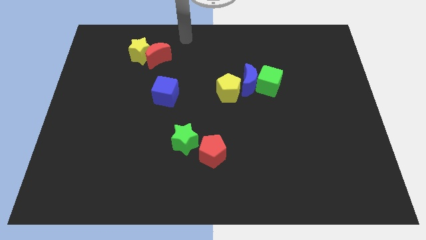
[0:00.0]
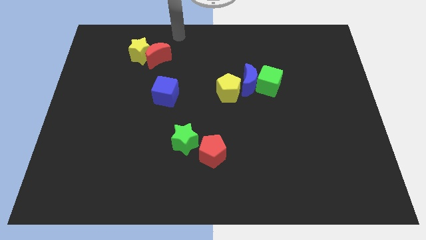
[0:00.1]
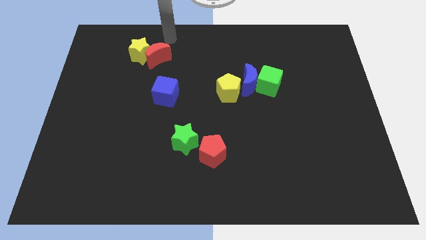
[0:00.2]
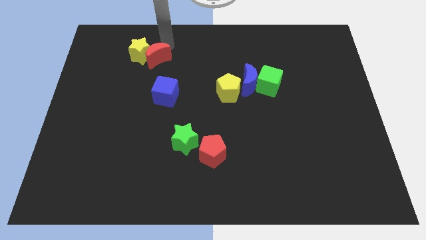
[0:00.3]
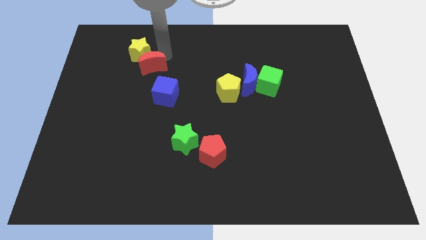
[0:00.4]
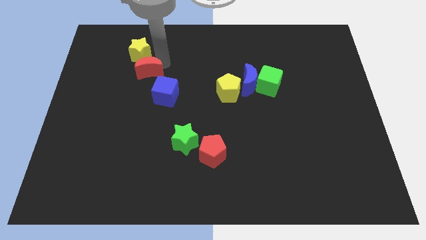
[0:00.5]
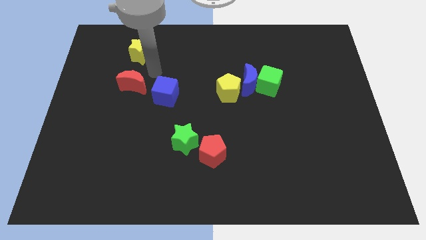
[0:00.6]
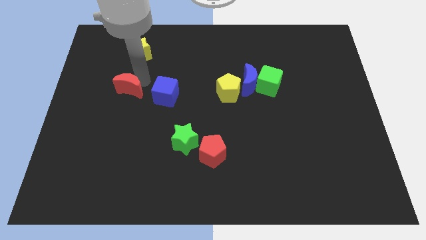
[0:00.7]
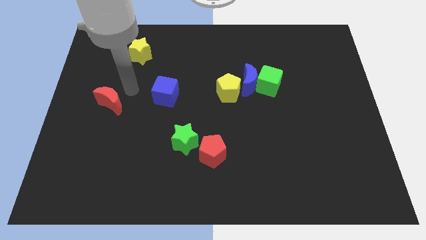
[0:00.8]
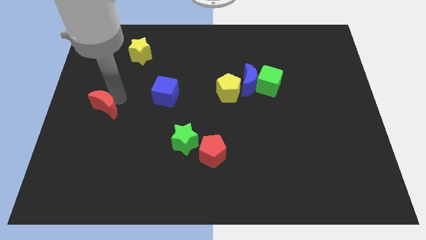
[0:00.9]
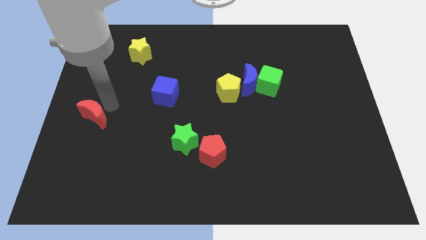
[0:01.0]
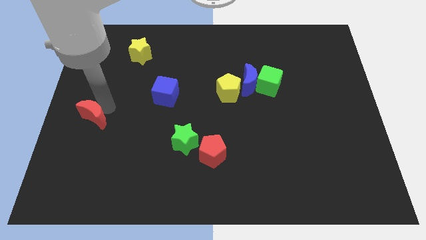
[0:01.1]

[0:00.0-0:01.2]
separate the red crescent from the yellow star

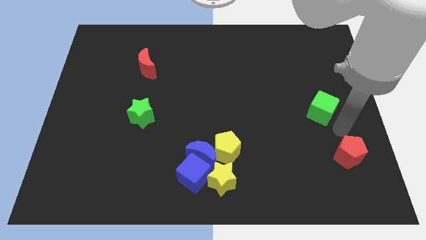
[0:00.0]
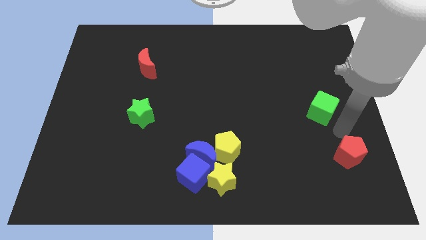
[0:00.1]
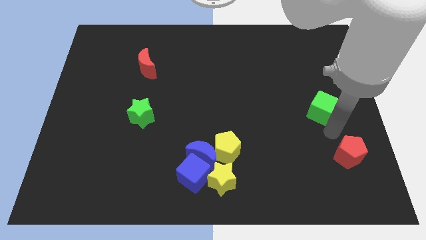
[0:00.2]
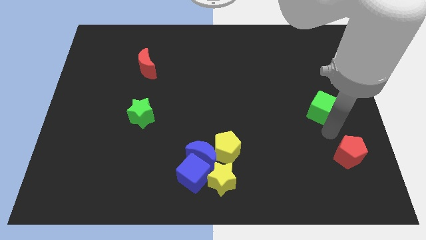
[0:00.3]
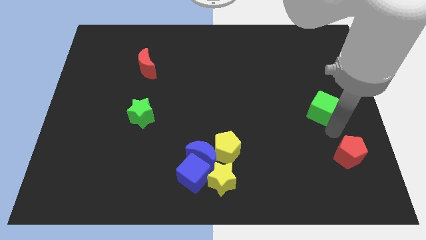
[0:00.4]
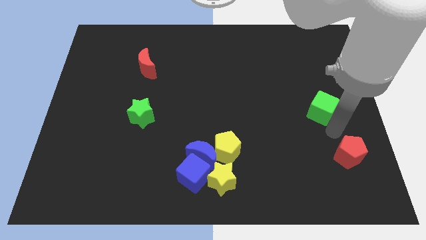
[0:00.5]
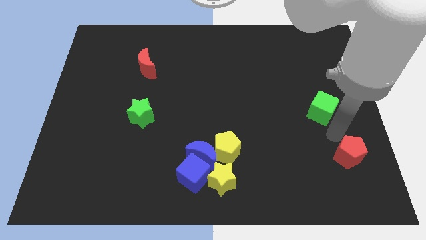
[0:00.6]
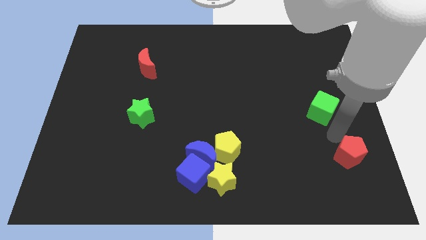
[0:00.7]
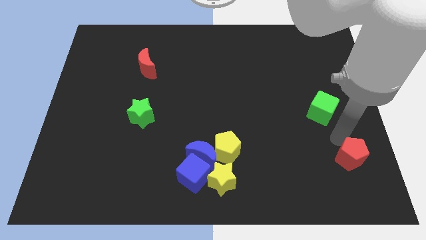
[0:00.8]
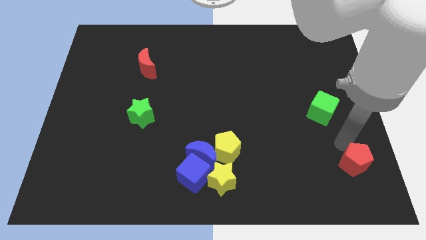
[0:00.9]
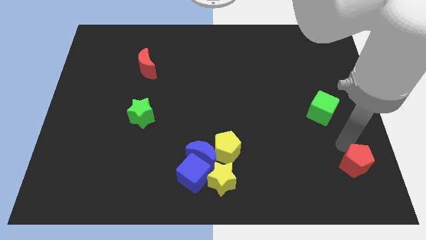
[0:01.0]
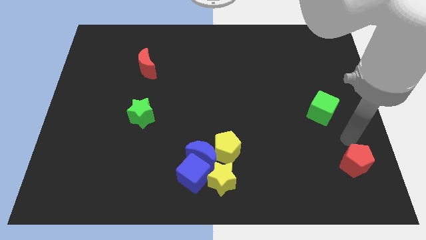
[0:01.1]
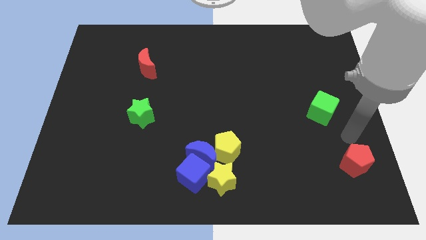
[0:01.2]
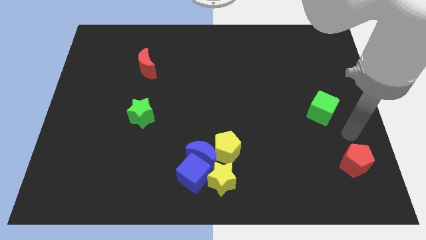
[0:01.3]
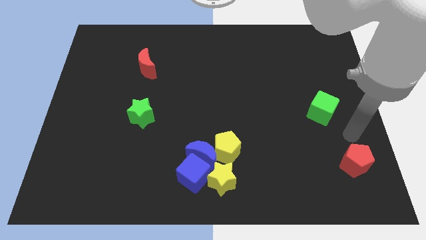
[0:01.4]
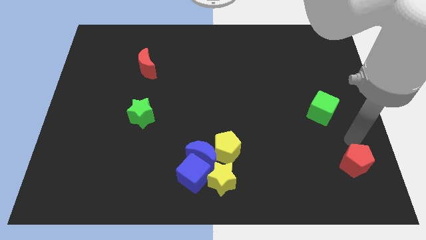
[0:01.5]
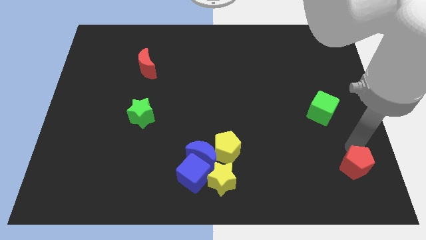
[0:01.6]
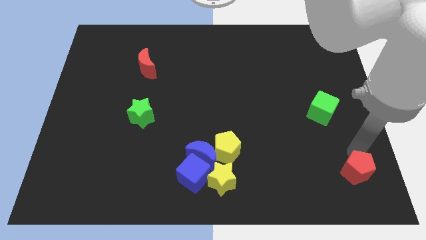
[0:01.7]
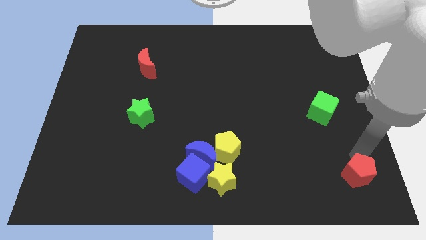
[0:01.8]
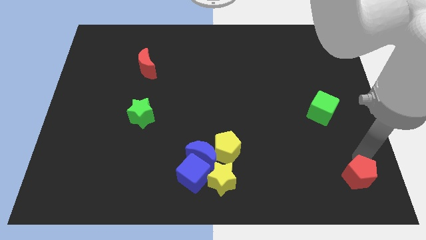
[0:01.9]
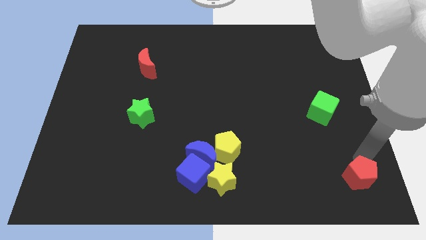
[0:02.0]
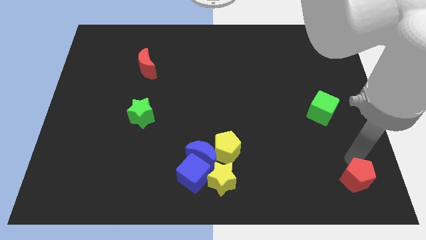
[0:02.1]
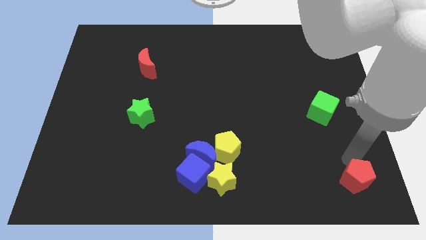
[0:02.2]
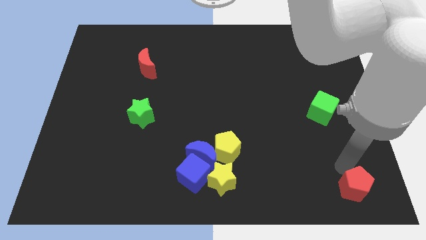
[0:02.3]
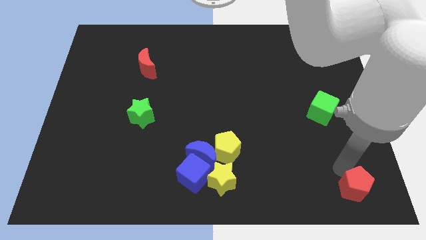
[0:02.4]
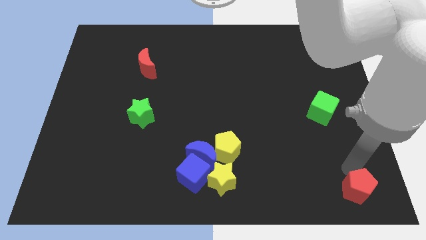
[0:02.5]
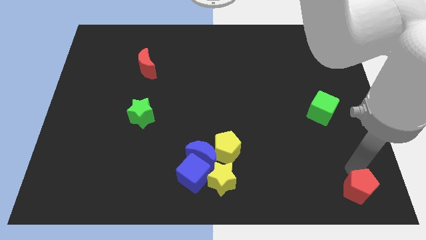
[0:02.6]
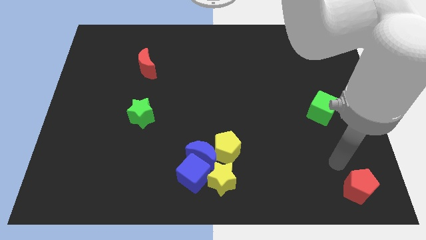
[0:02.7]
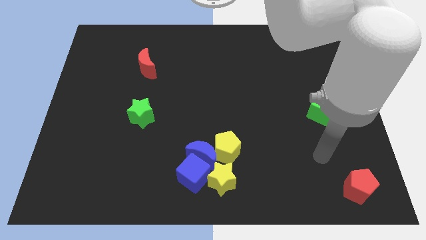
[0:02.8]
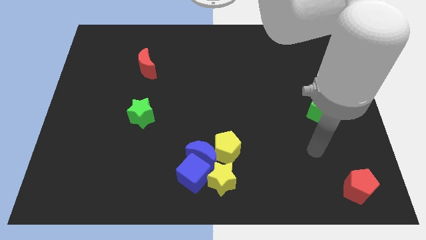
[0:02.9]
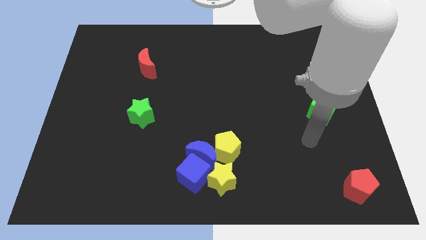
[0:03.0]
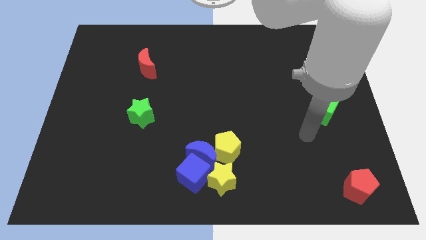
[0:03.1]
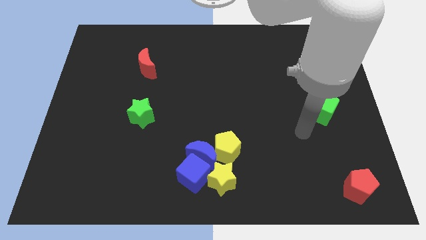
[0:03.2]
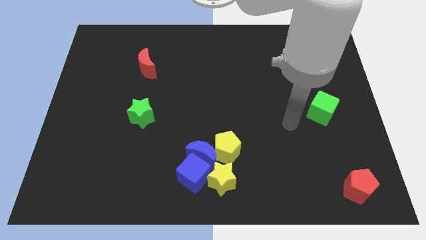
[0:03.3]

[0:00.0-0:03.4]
push the red pentagon to the bottom right corner

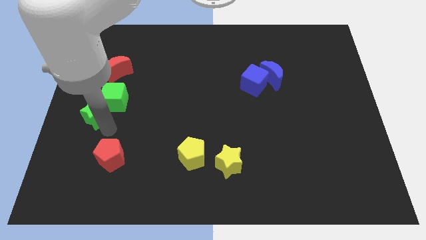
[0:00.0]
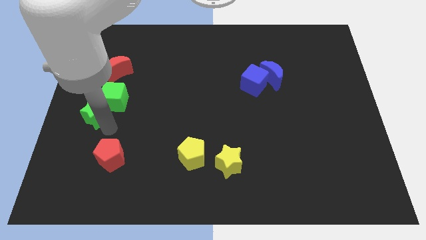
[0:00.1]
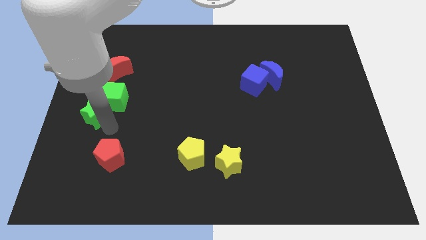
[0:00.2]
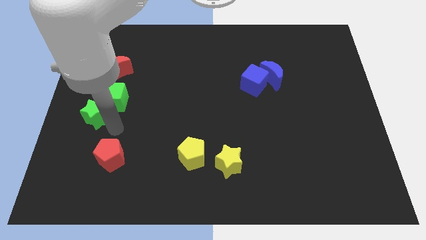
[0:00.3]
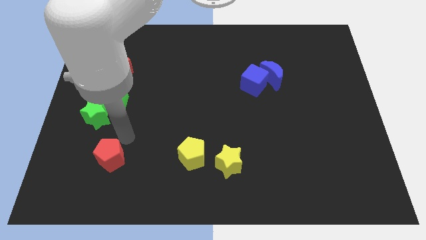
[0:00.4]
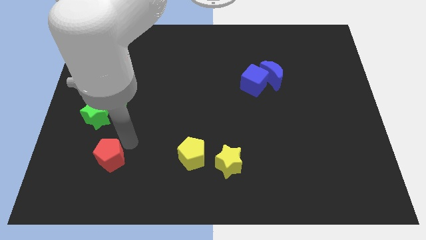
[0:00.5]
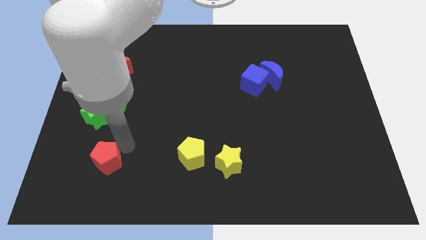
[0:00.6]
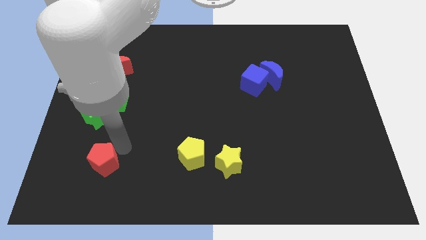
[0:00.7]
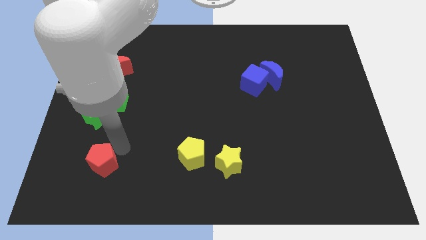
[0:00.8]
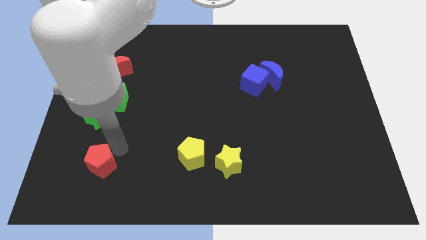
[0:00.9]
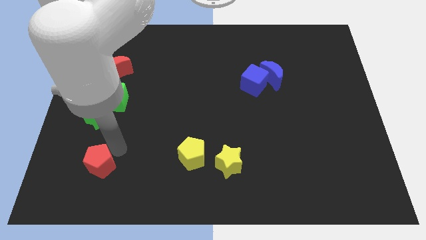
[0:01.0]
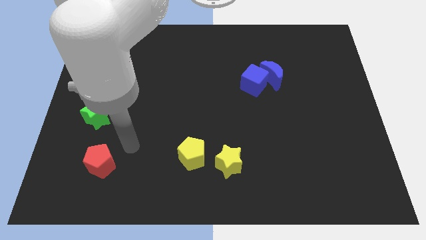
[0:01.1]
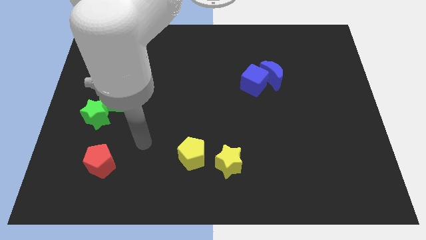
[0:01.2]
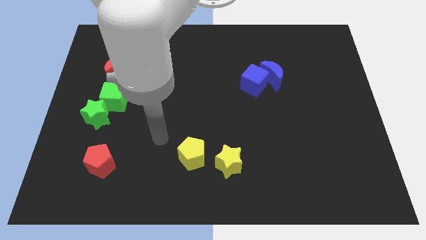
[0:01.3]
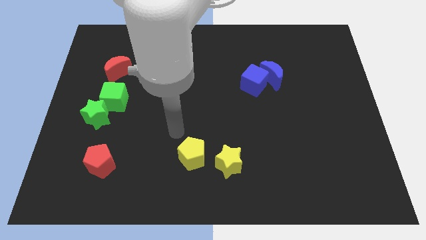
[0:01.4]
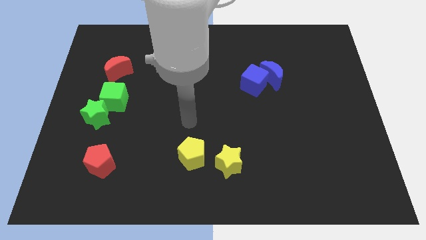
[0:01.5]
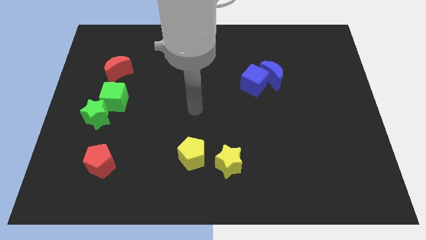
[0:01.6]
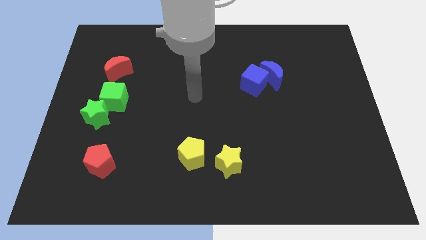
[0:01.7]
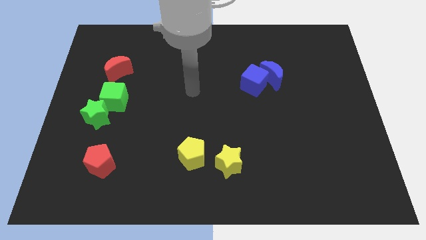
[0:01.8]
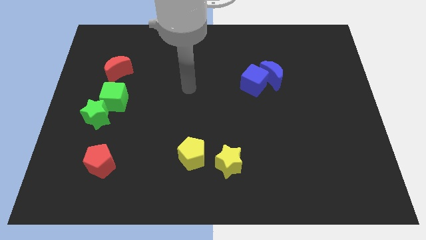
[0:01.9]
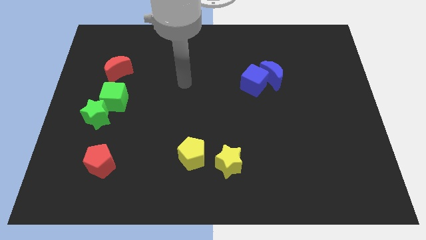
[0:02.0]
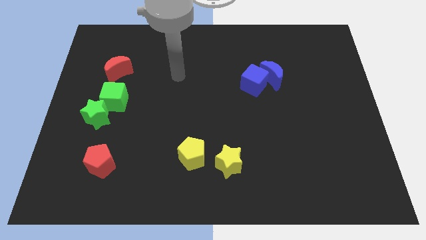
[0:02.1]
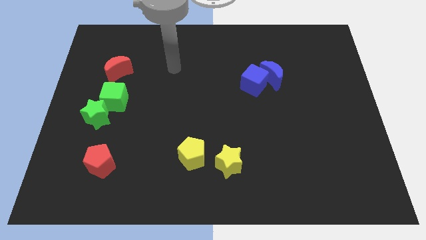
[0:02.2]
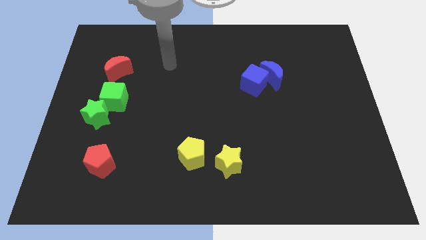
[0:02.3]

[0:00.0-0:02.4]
push the red pentagon to the bottom left side of the board

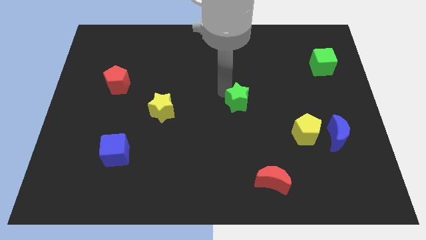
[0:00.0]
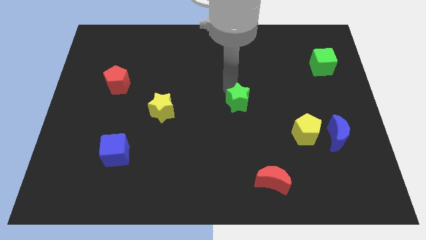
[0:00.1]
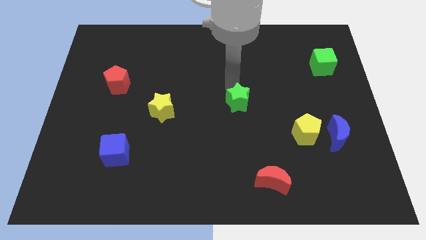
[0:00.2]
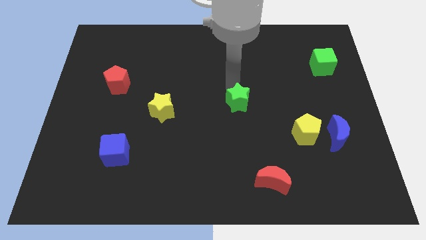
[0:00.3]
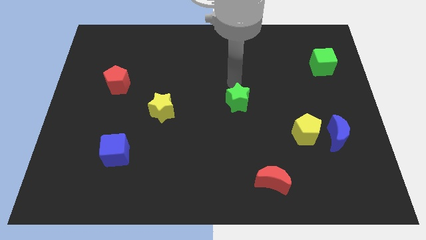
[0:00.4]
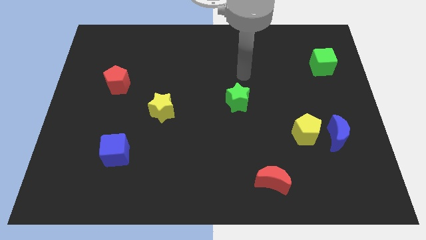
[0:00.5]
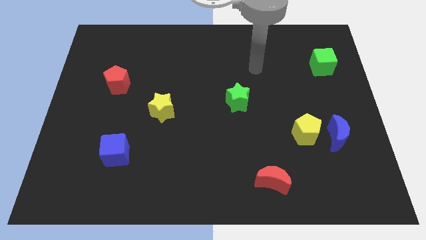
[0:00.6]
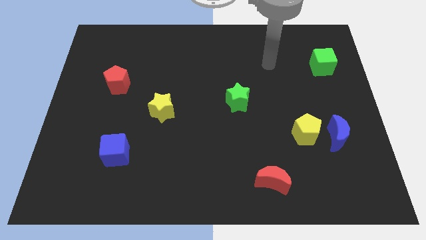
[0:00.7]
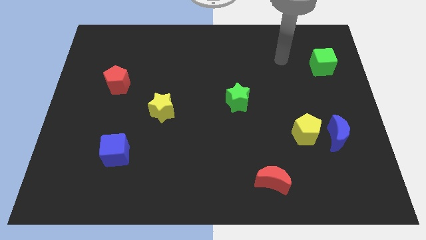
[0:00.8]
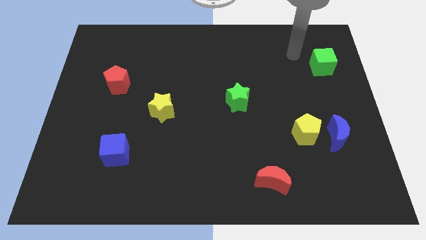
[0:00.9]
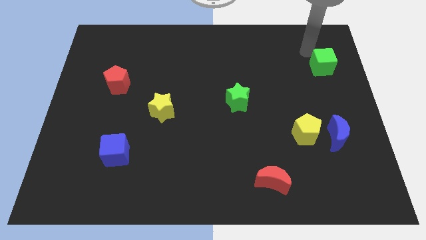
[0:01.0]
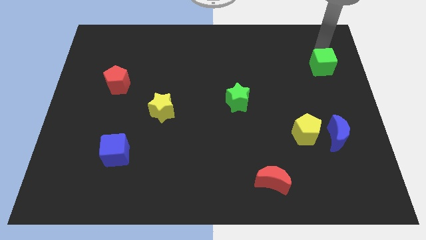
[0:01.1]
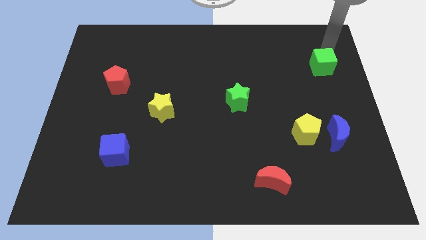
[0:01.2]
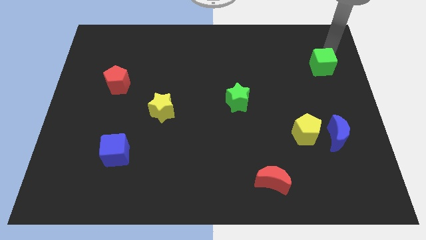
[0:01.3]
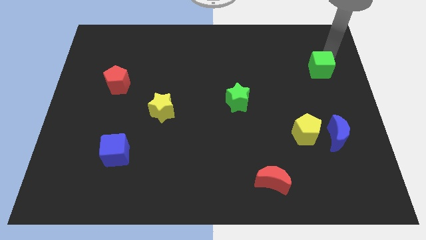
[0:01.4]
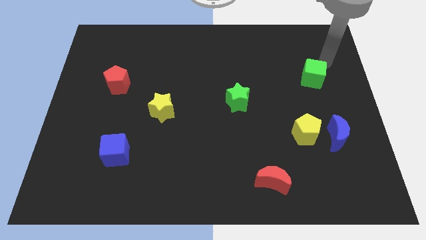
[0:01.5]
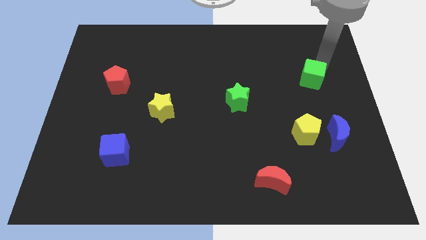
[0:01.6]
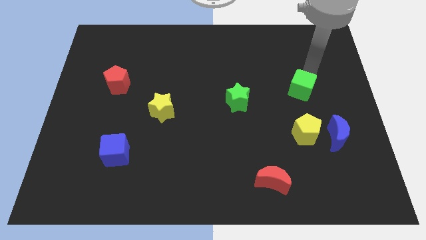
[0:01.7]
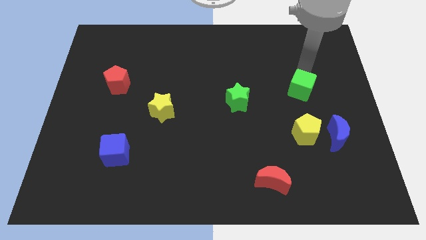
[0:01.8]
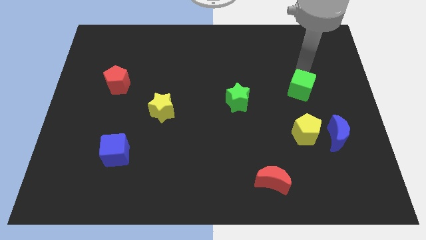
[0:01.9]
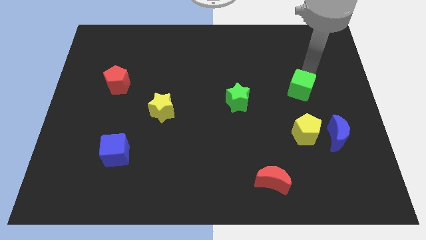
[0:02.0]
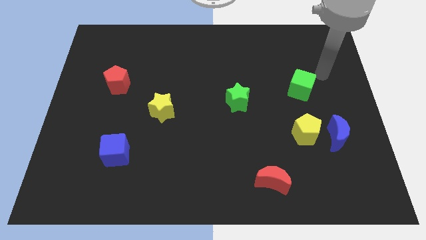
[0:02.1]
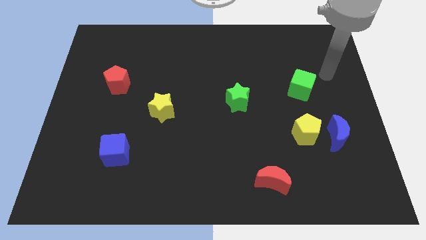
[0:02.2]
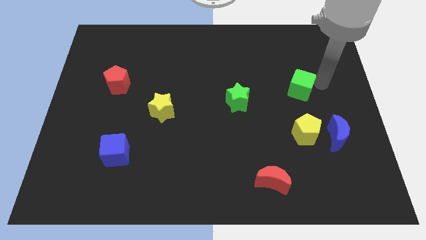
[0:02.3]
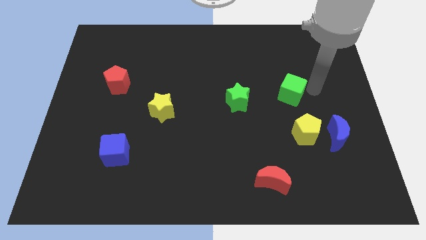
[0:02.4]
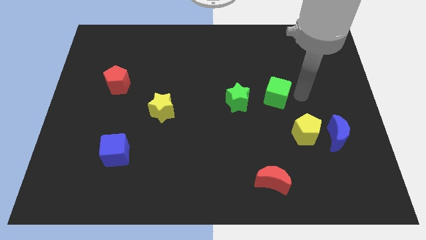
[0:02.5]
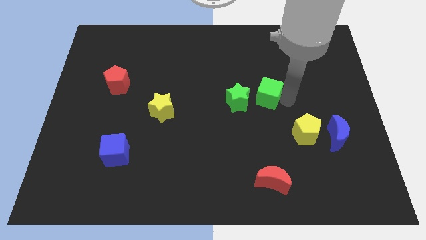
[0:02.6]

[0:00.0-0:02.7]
place the green cube diagonally top left to the yellow pentagon
